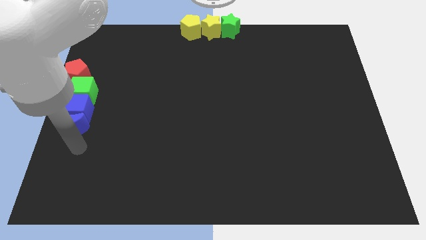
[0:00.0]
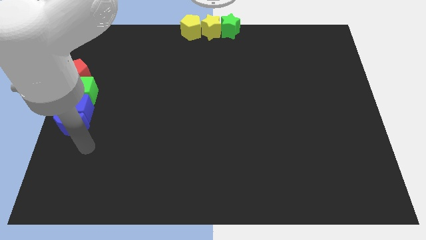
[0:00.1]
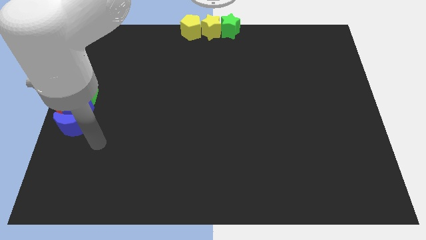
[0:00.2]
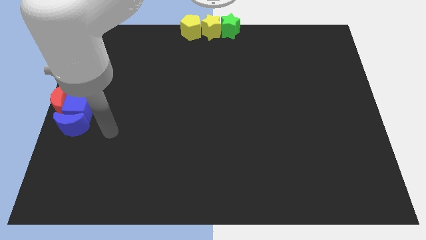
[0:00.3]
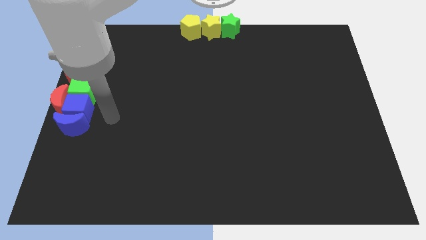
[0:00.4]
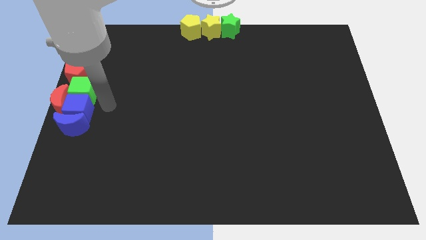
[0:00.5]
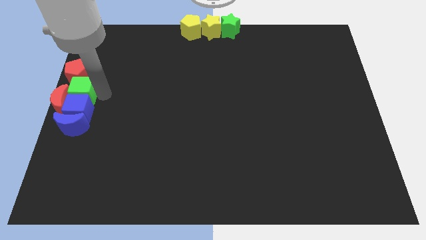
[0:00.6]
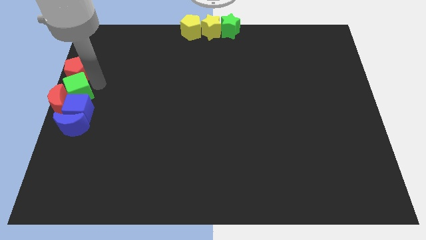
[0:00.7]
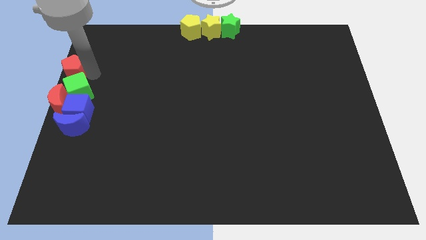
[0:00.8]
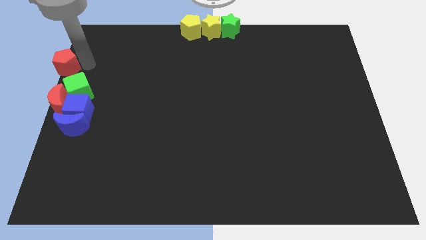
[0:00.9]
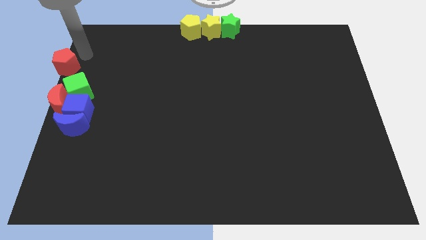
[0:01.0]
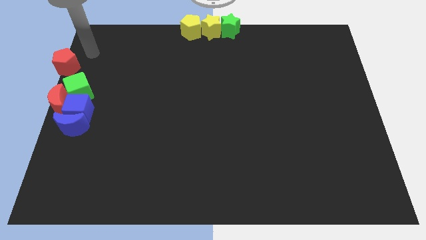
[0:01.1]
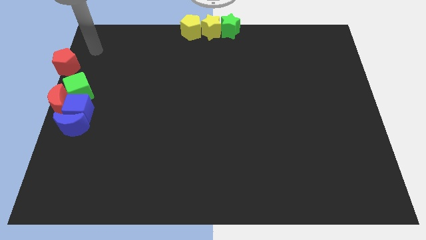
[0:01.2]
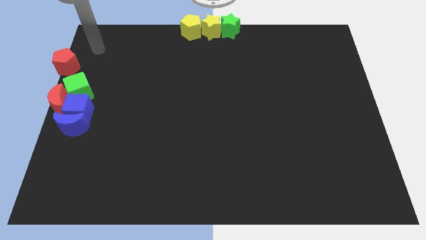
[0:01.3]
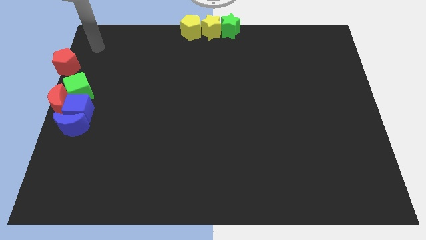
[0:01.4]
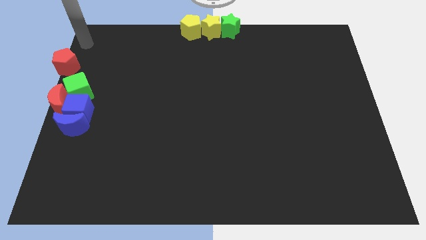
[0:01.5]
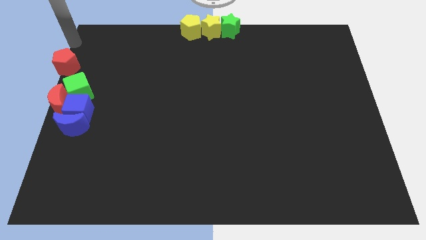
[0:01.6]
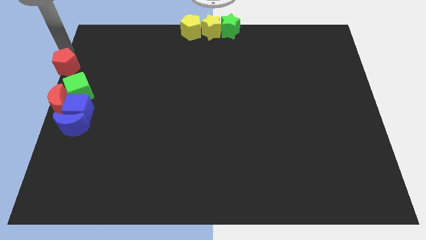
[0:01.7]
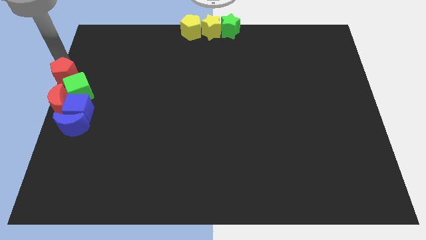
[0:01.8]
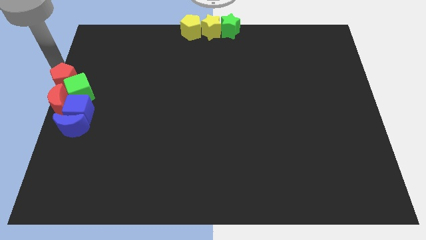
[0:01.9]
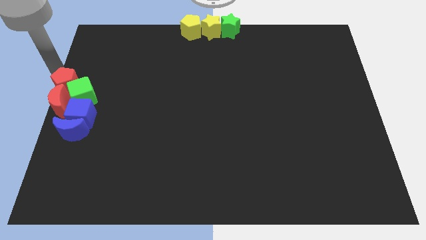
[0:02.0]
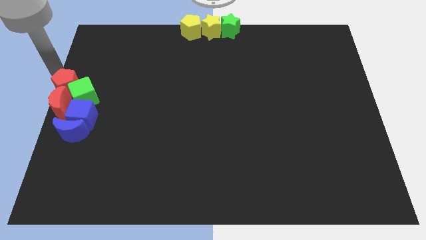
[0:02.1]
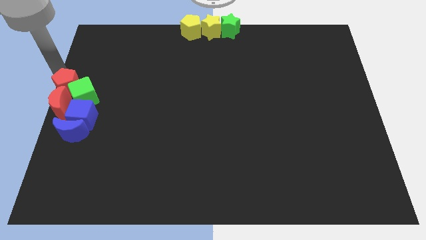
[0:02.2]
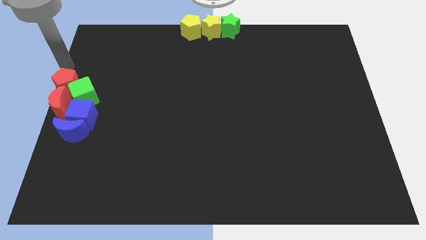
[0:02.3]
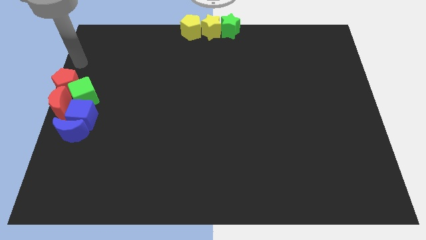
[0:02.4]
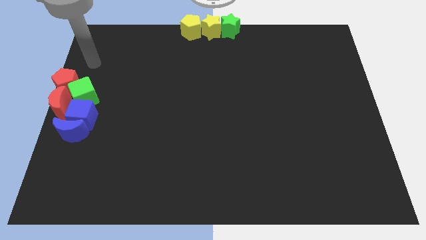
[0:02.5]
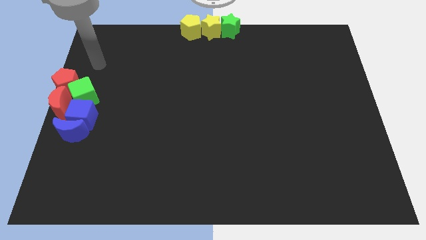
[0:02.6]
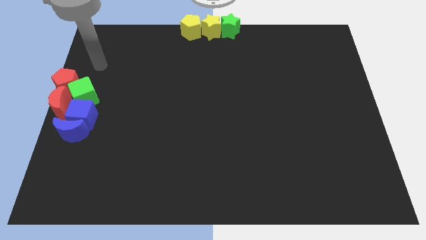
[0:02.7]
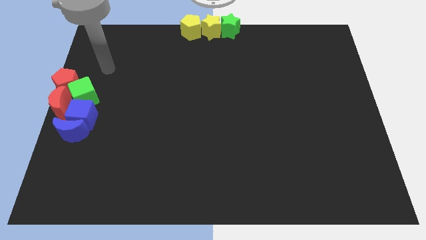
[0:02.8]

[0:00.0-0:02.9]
move the red pentagon into the red crescent

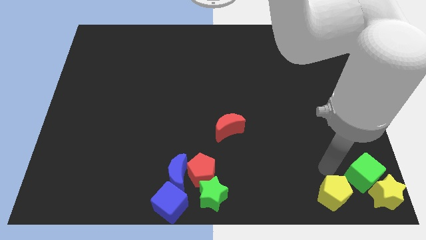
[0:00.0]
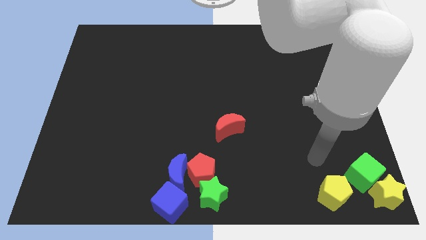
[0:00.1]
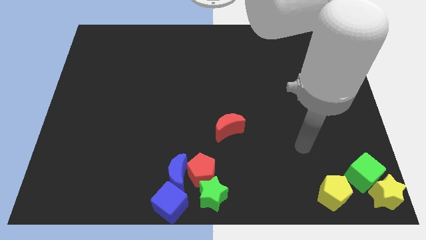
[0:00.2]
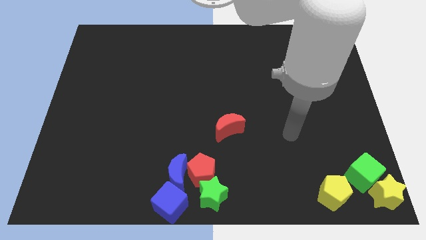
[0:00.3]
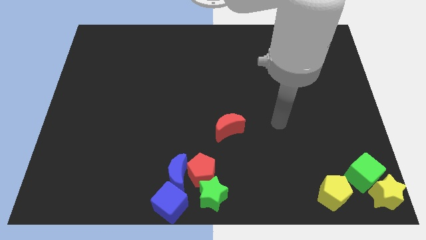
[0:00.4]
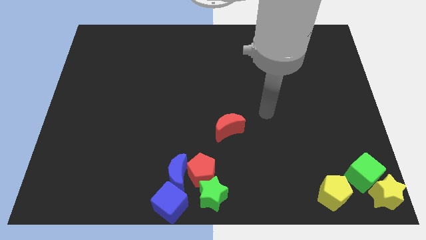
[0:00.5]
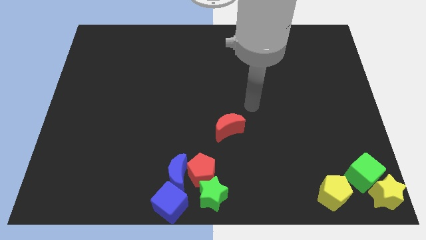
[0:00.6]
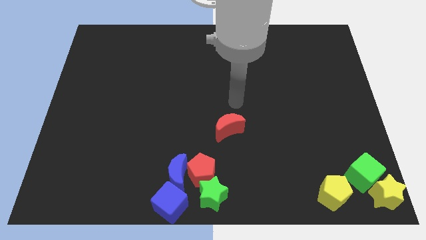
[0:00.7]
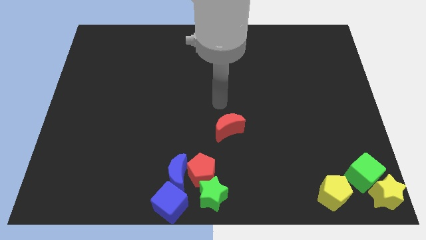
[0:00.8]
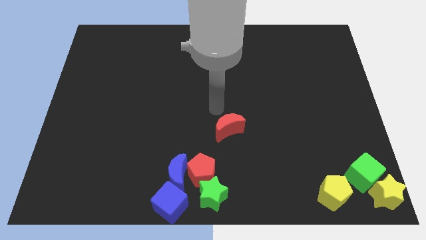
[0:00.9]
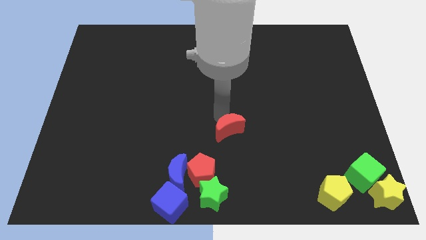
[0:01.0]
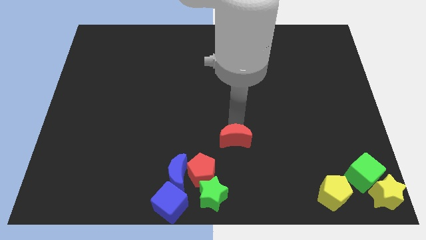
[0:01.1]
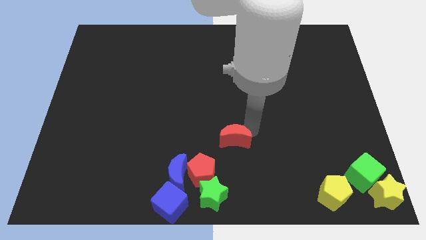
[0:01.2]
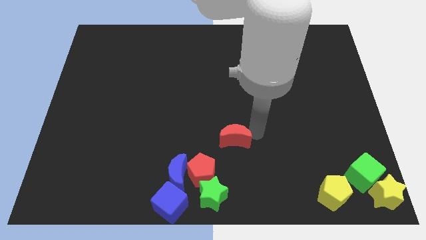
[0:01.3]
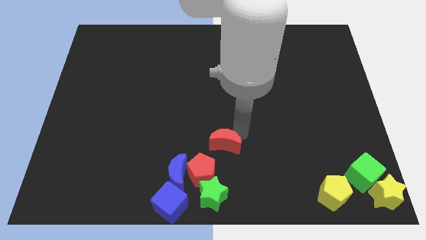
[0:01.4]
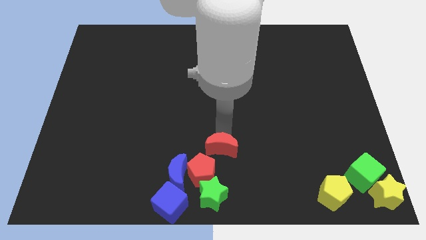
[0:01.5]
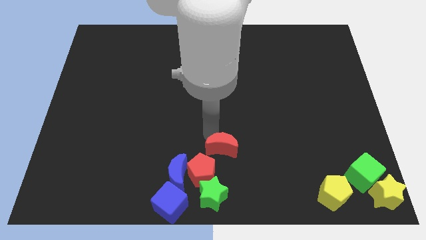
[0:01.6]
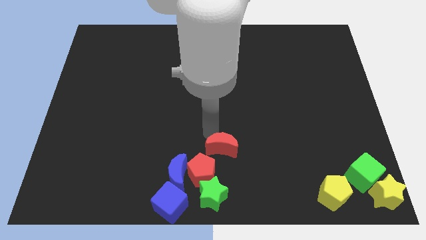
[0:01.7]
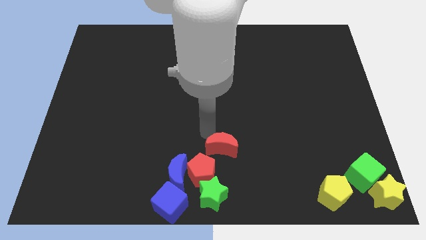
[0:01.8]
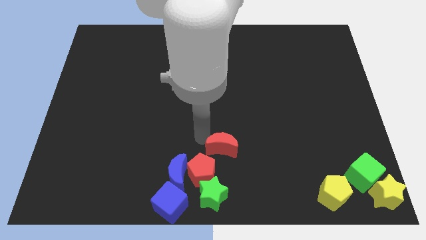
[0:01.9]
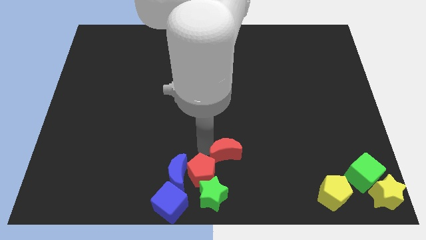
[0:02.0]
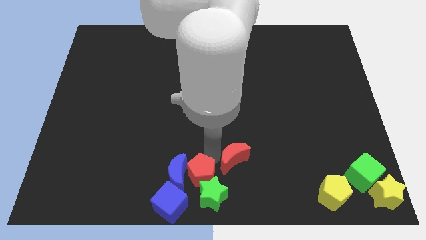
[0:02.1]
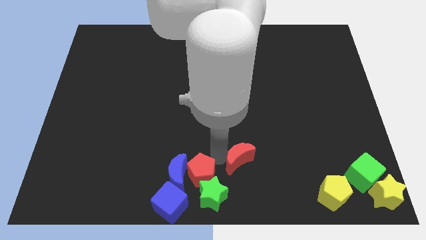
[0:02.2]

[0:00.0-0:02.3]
move the red crescent to the right of the red pentagon

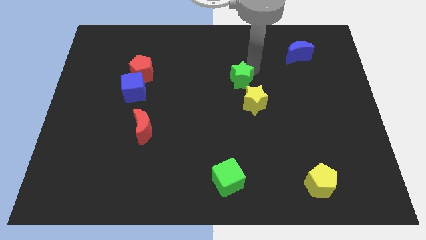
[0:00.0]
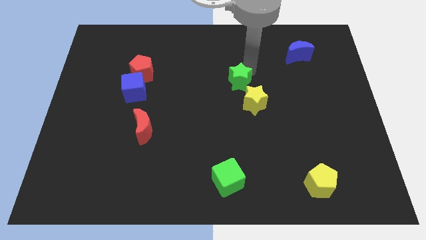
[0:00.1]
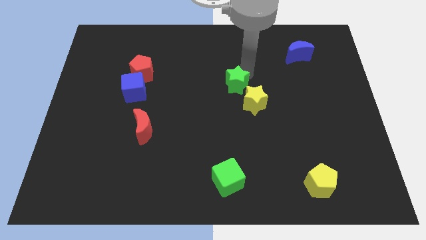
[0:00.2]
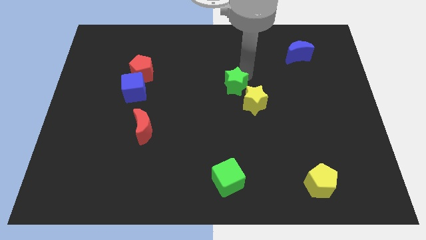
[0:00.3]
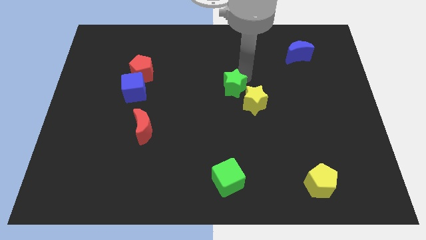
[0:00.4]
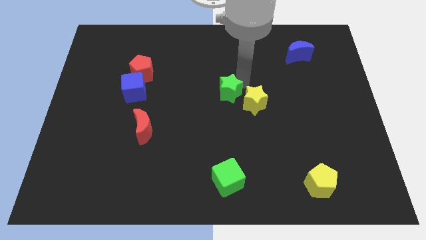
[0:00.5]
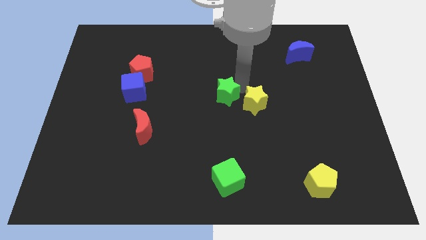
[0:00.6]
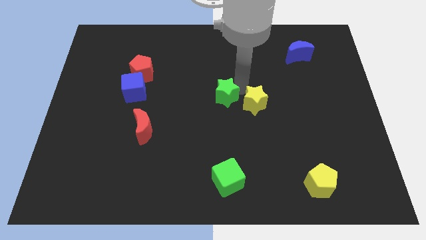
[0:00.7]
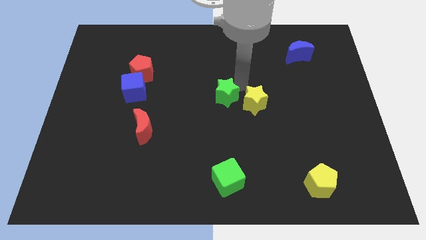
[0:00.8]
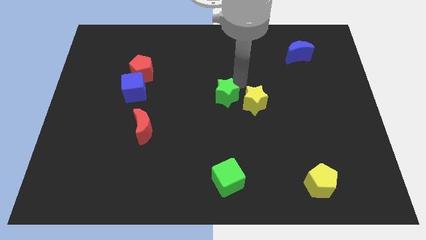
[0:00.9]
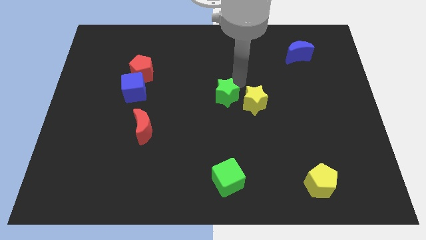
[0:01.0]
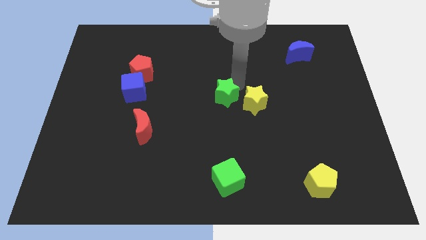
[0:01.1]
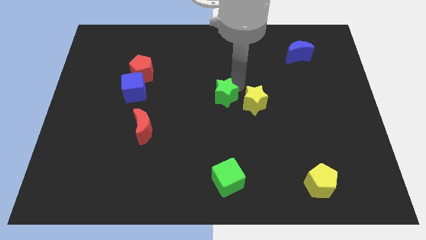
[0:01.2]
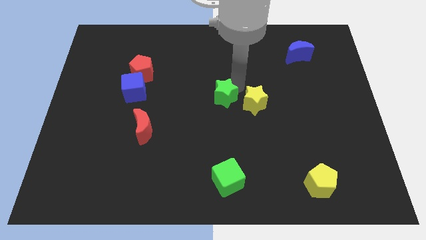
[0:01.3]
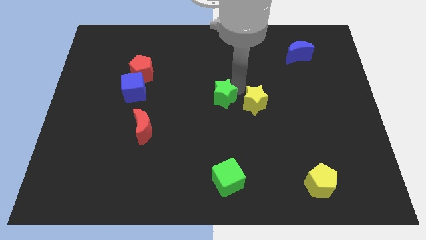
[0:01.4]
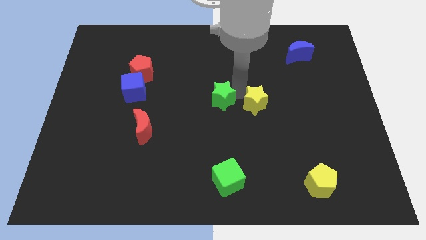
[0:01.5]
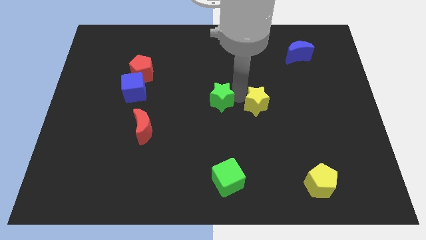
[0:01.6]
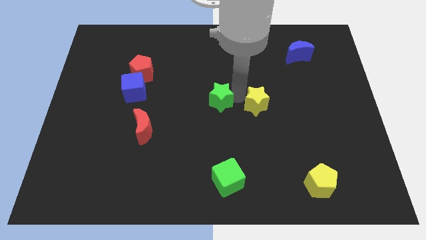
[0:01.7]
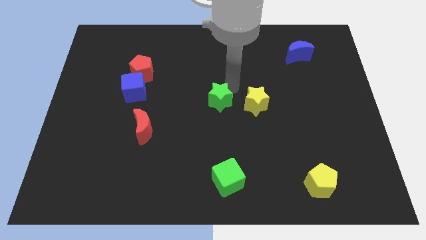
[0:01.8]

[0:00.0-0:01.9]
move the green star to the left of the yellow star

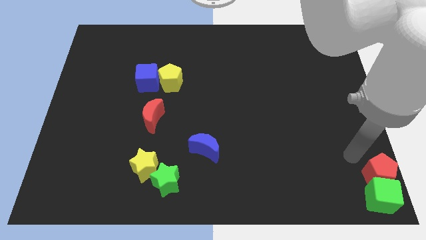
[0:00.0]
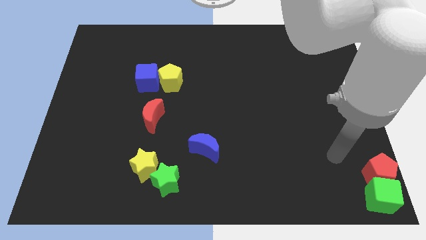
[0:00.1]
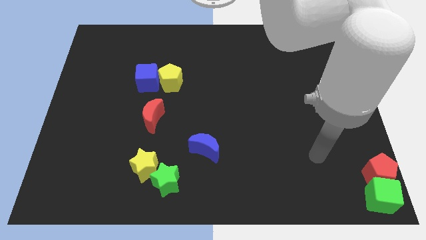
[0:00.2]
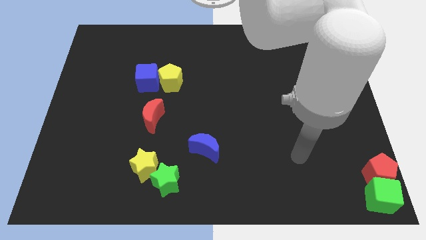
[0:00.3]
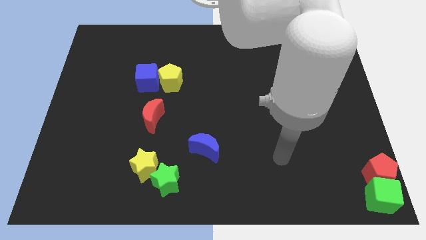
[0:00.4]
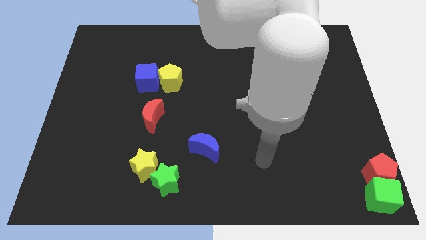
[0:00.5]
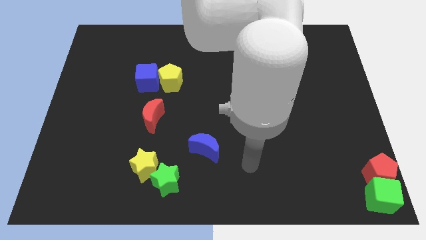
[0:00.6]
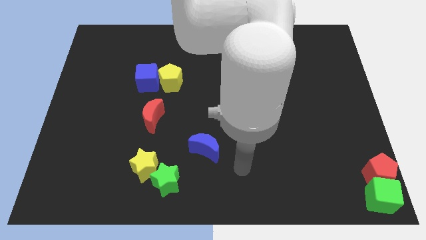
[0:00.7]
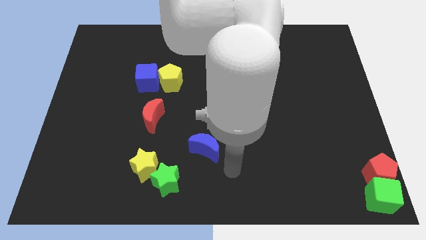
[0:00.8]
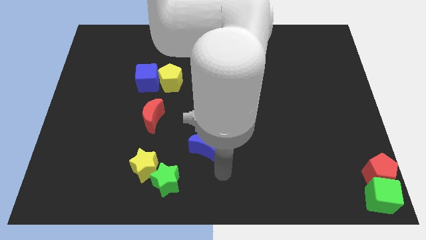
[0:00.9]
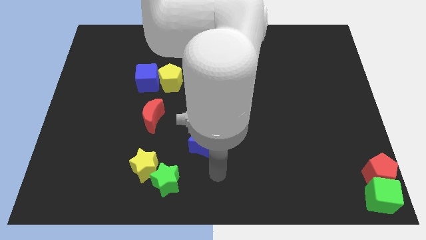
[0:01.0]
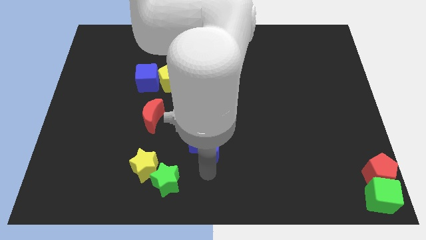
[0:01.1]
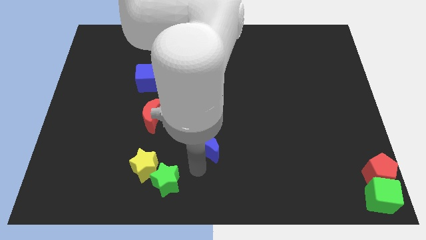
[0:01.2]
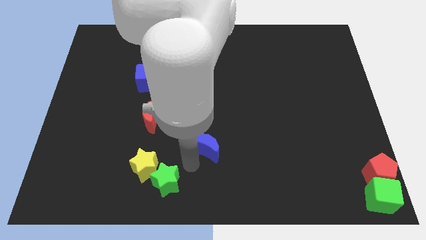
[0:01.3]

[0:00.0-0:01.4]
move the pointer away from the red pentagon

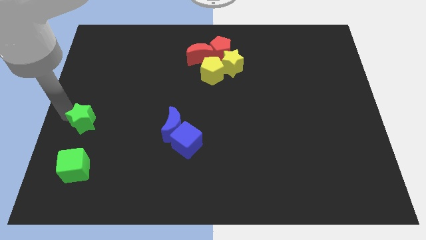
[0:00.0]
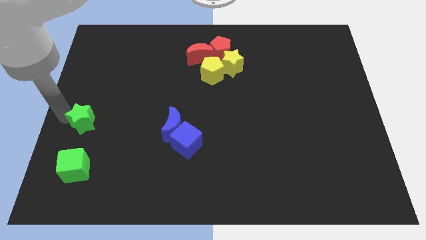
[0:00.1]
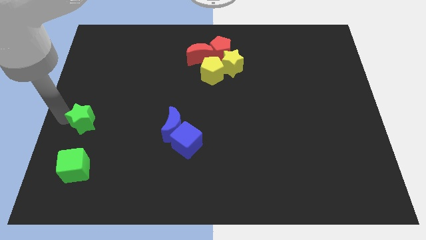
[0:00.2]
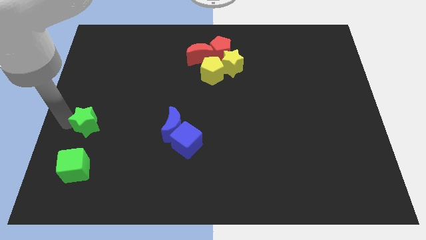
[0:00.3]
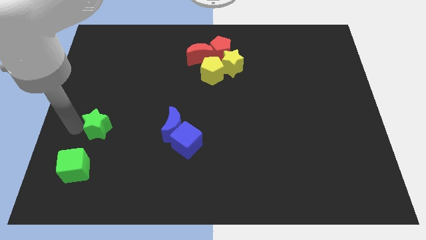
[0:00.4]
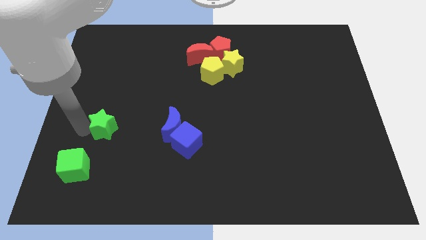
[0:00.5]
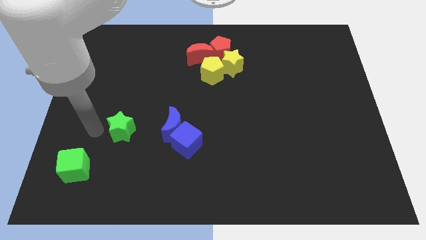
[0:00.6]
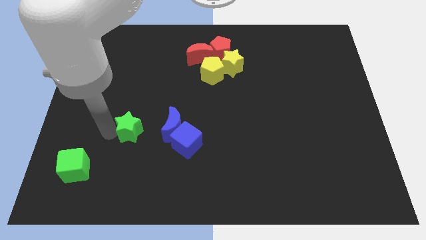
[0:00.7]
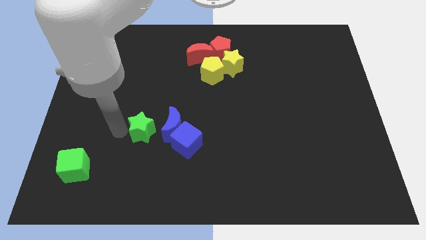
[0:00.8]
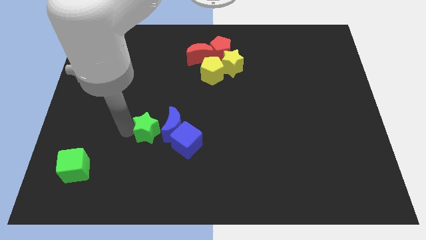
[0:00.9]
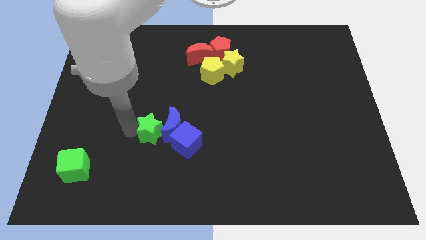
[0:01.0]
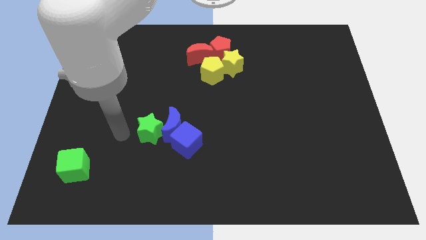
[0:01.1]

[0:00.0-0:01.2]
slide the green star into the blue moon
